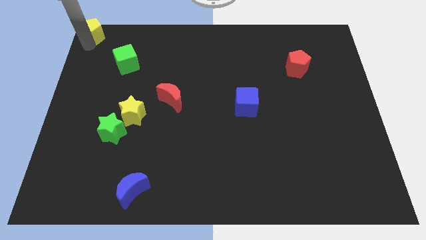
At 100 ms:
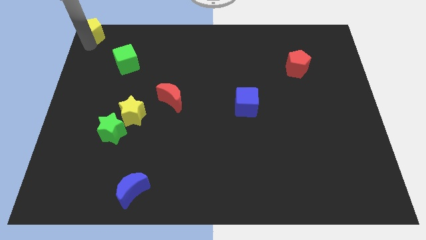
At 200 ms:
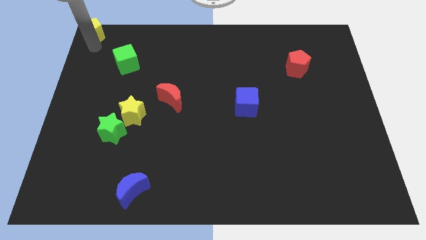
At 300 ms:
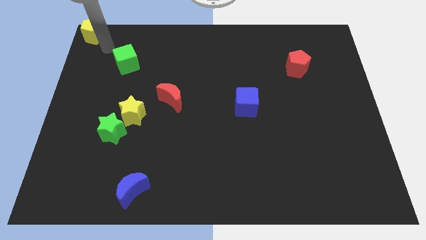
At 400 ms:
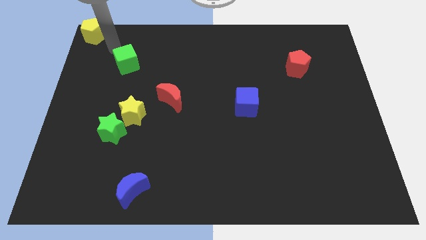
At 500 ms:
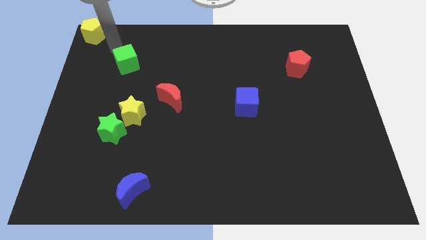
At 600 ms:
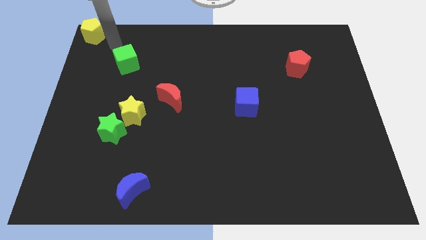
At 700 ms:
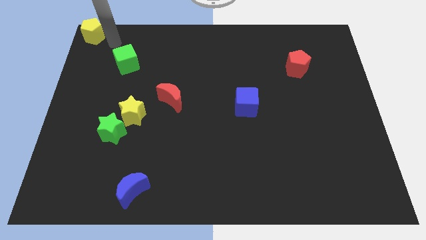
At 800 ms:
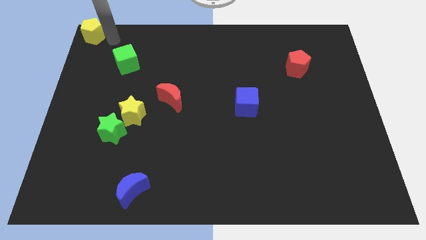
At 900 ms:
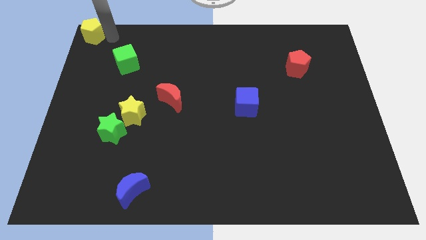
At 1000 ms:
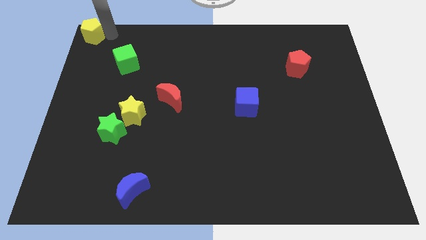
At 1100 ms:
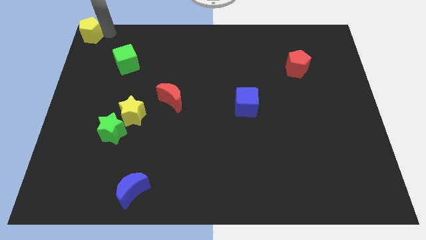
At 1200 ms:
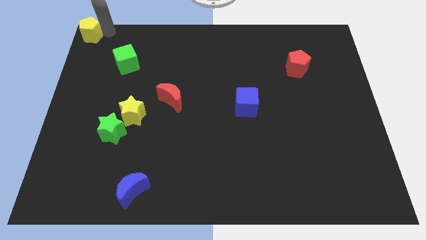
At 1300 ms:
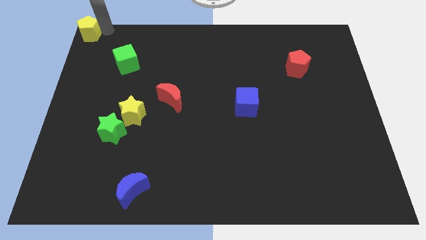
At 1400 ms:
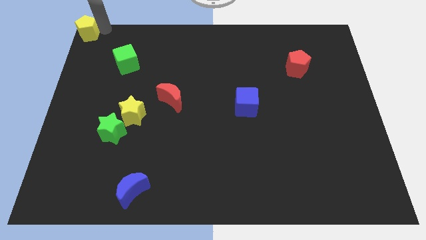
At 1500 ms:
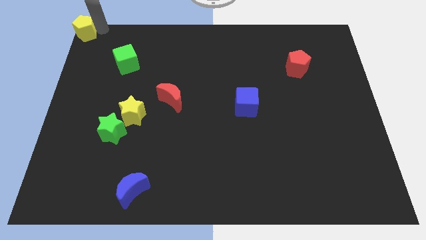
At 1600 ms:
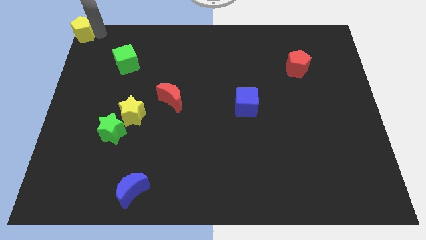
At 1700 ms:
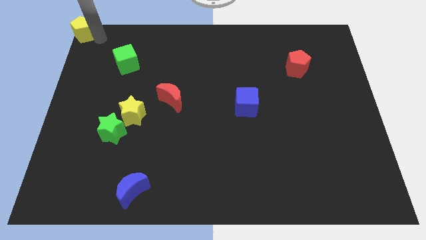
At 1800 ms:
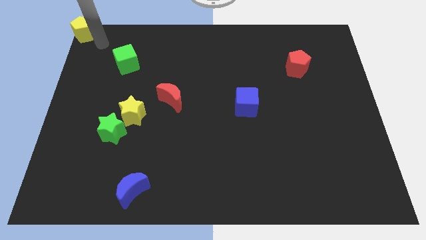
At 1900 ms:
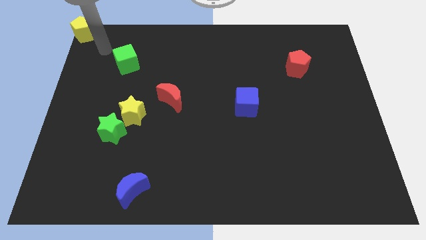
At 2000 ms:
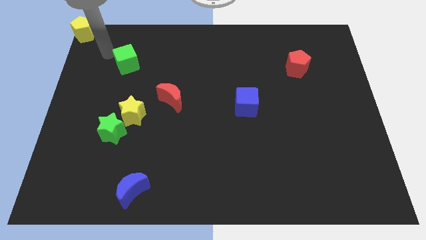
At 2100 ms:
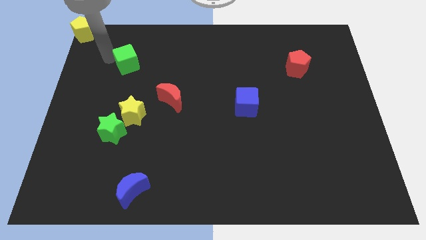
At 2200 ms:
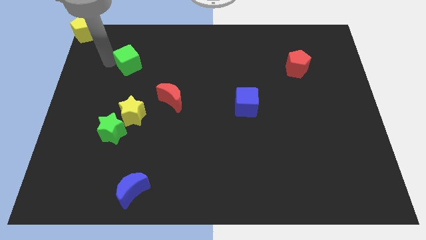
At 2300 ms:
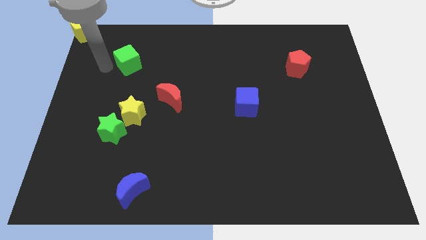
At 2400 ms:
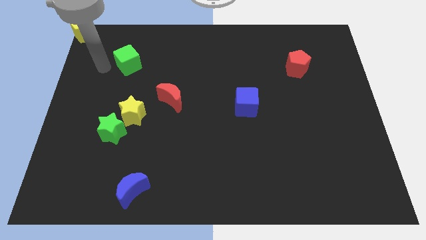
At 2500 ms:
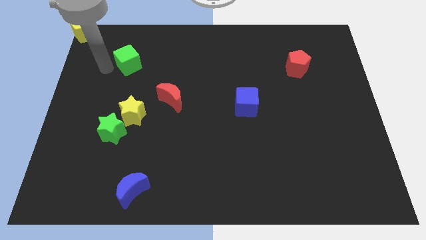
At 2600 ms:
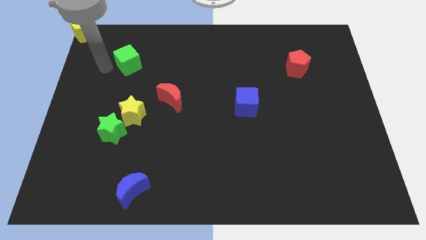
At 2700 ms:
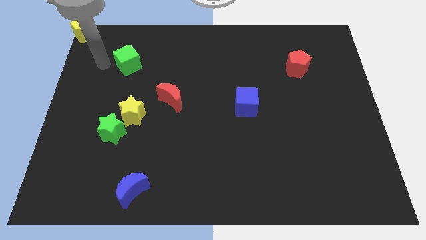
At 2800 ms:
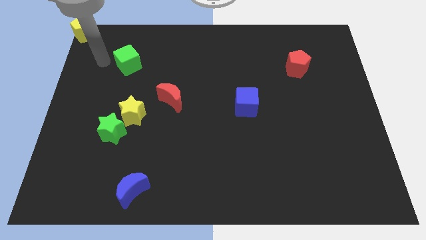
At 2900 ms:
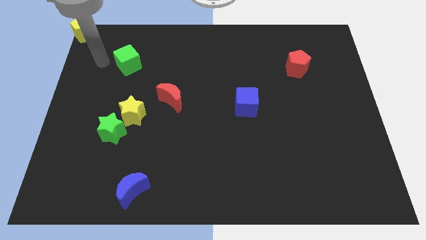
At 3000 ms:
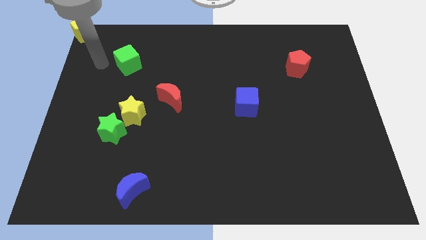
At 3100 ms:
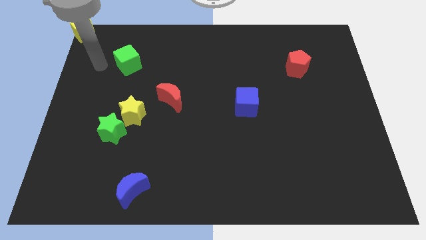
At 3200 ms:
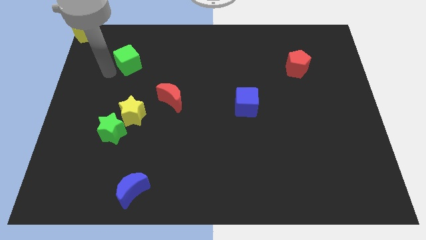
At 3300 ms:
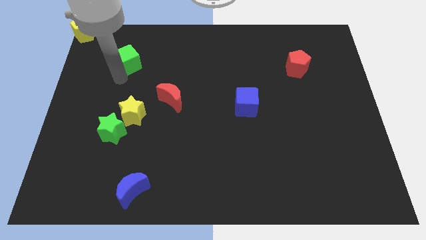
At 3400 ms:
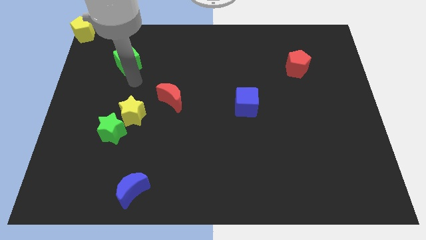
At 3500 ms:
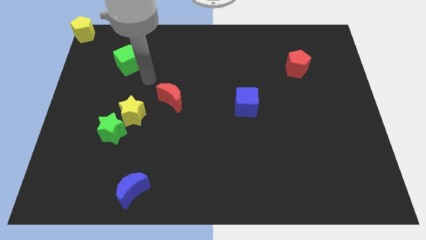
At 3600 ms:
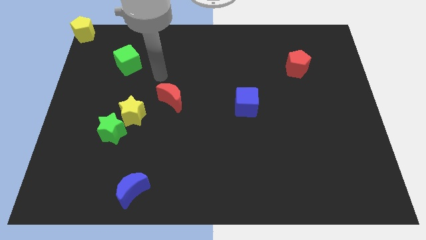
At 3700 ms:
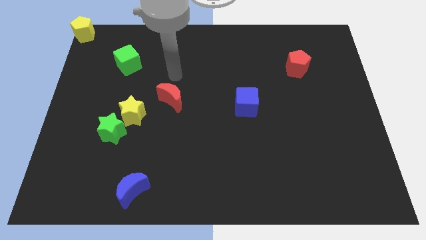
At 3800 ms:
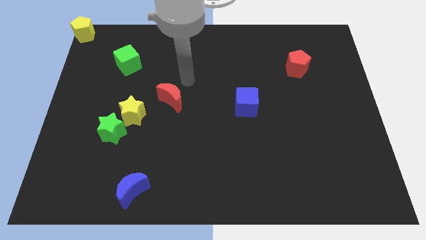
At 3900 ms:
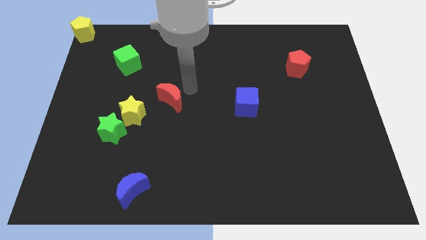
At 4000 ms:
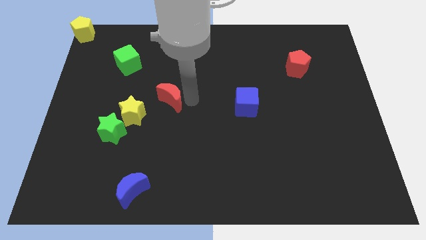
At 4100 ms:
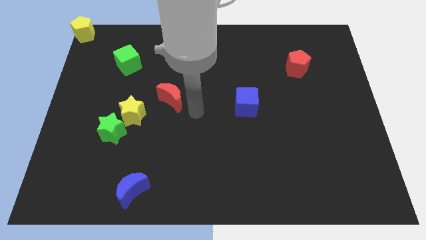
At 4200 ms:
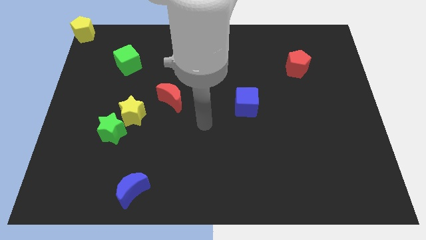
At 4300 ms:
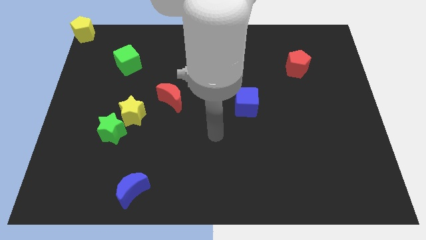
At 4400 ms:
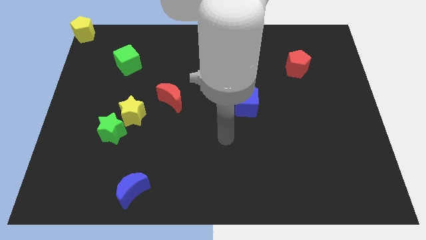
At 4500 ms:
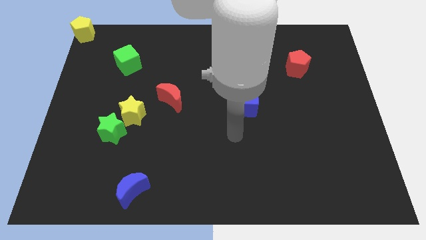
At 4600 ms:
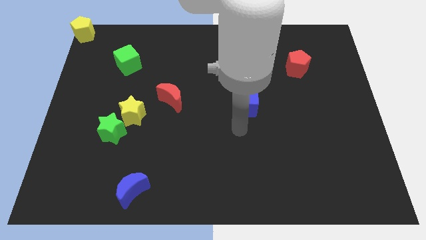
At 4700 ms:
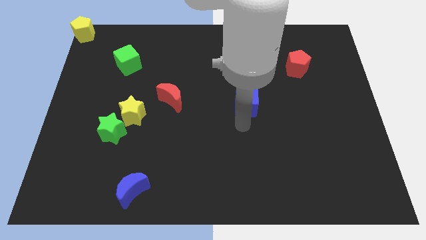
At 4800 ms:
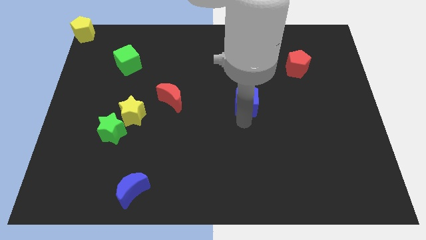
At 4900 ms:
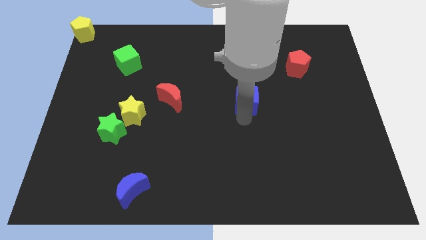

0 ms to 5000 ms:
move your arm away from the yellow pentagon

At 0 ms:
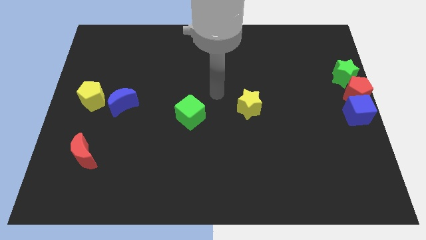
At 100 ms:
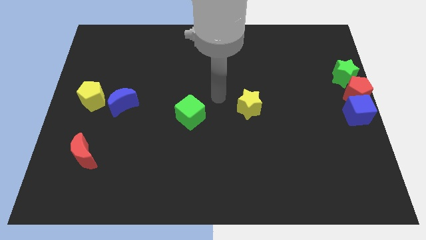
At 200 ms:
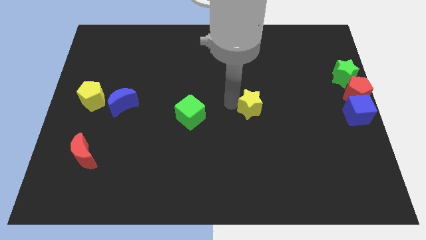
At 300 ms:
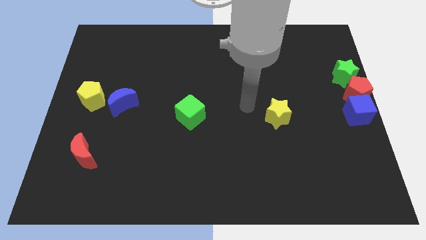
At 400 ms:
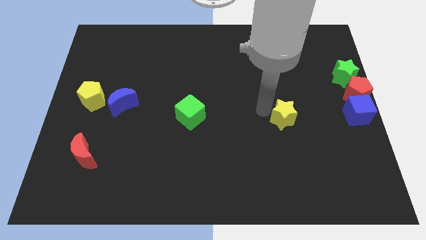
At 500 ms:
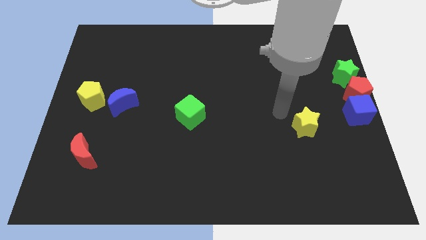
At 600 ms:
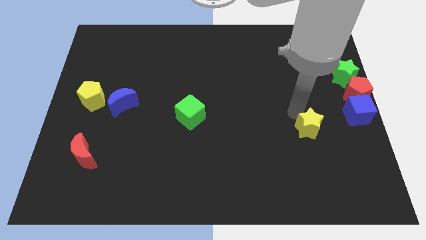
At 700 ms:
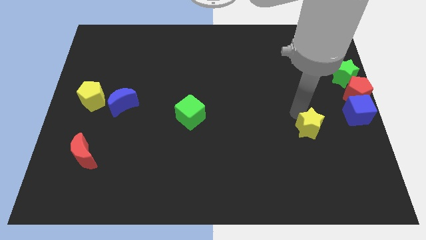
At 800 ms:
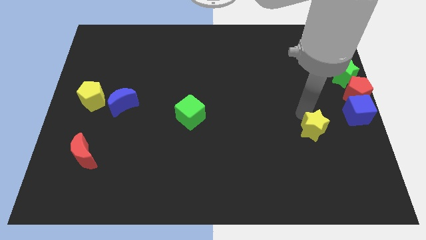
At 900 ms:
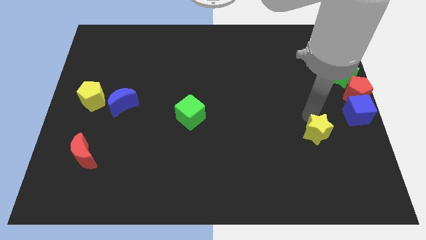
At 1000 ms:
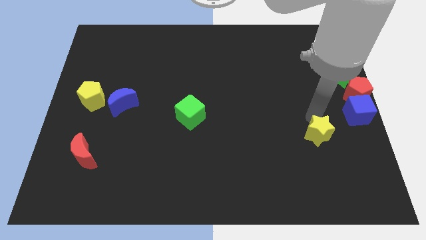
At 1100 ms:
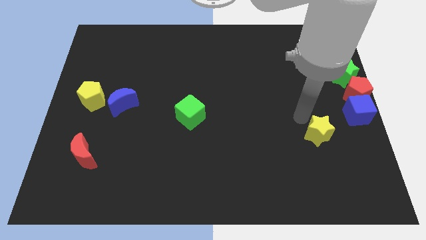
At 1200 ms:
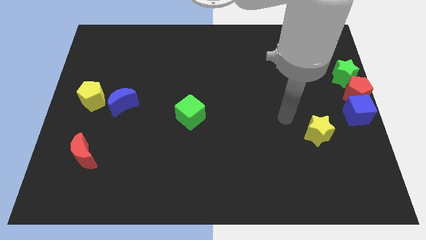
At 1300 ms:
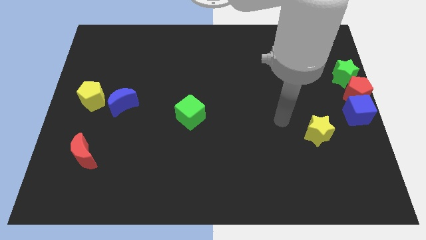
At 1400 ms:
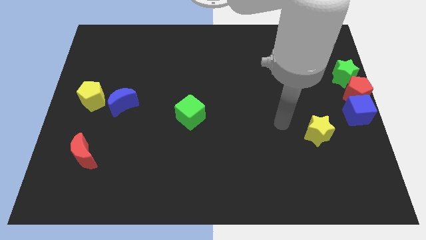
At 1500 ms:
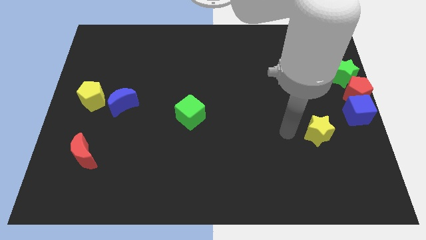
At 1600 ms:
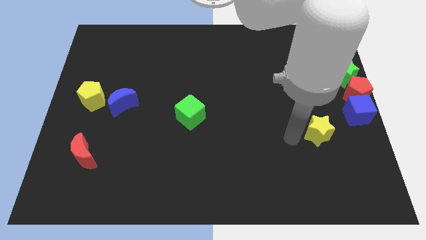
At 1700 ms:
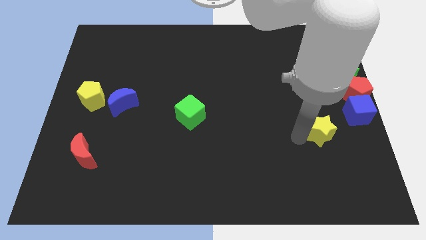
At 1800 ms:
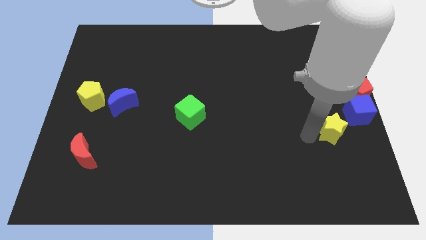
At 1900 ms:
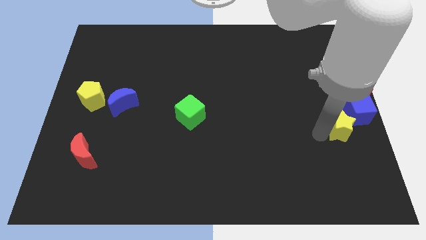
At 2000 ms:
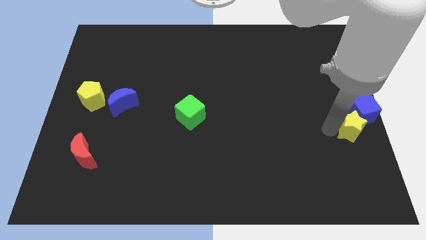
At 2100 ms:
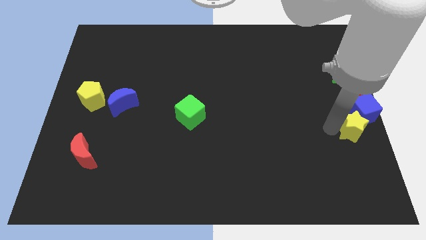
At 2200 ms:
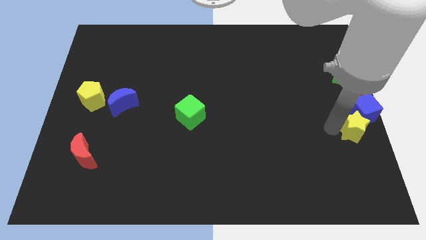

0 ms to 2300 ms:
move the yellow star from the bottom of the blue cube

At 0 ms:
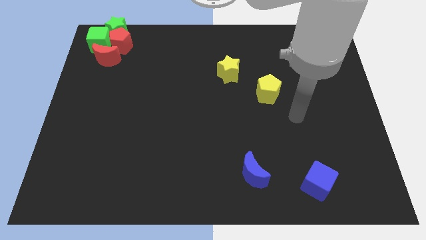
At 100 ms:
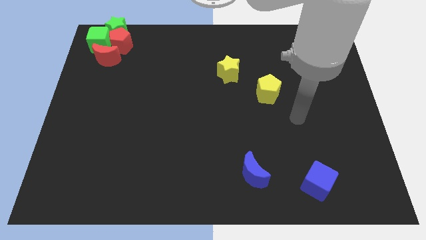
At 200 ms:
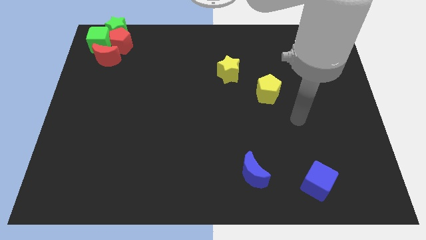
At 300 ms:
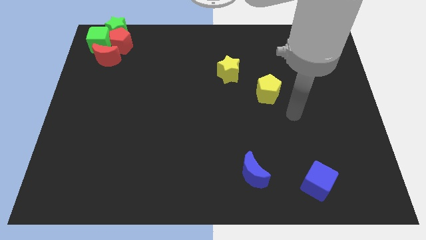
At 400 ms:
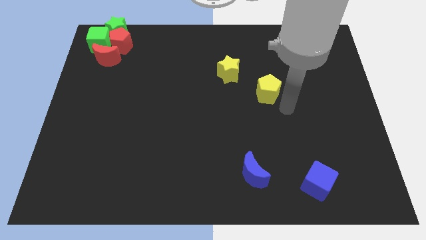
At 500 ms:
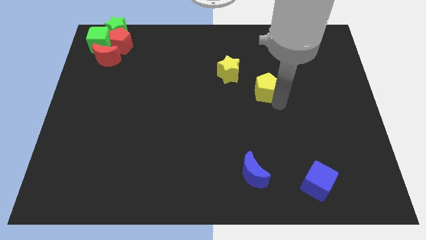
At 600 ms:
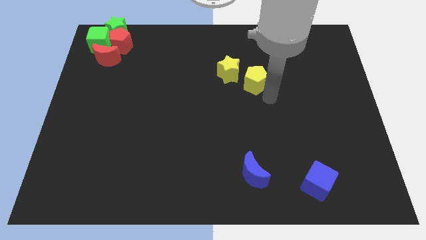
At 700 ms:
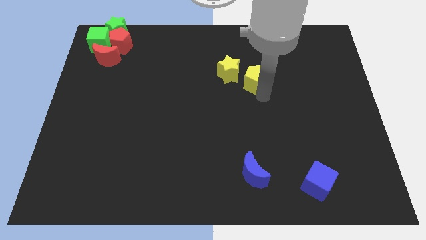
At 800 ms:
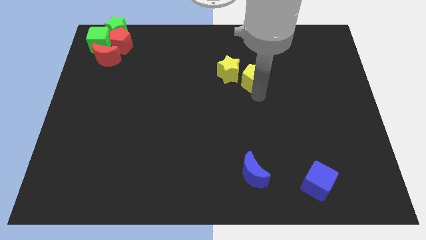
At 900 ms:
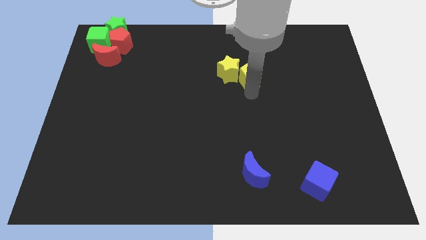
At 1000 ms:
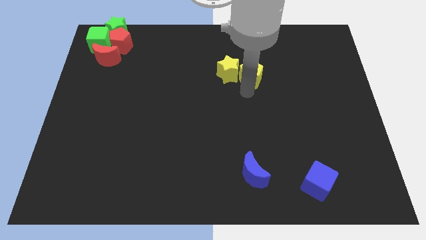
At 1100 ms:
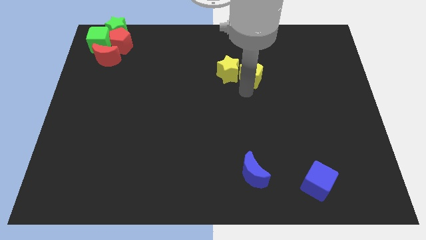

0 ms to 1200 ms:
move the yellow pentagon at the bottom right to the yellow star

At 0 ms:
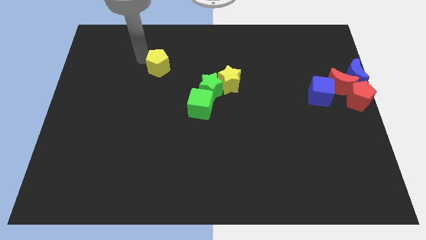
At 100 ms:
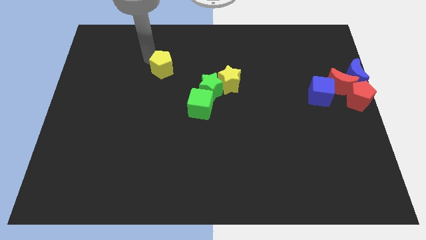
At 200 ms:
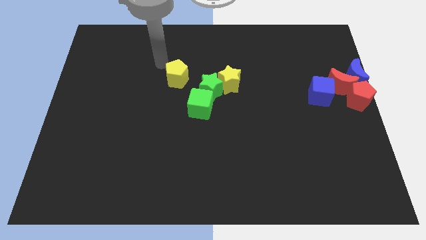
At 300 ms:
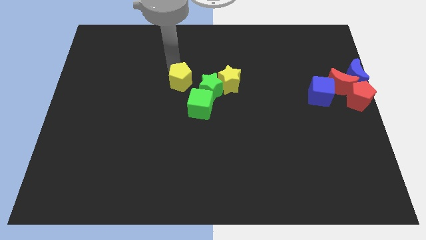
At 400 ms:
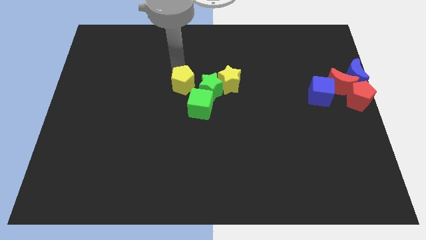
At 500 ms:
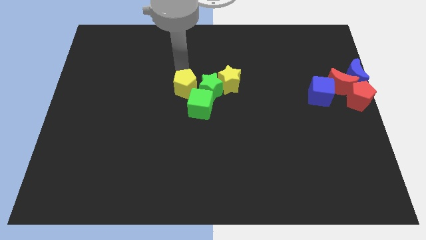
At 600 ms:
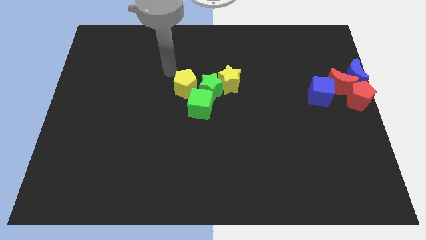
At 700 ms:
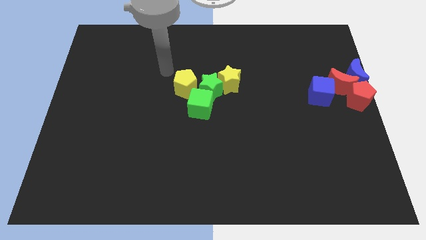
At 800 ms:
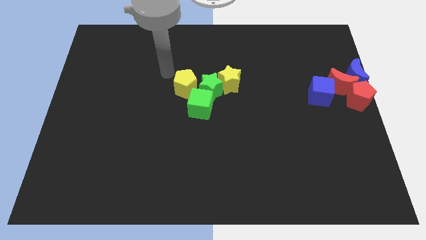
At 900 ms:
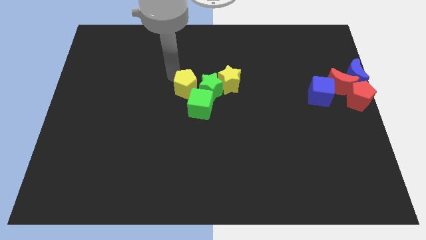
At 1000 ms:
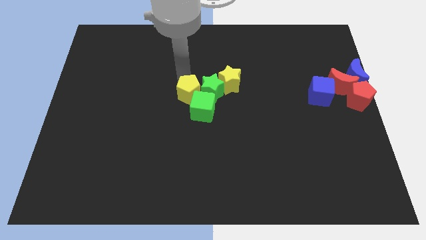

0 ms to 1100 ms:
move the yellow pentagon to the left side of the green star
